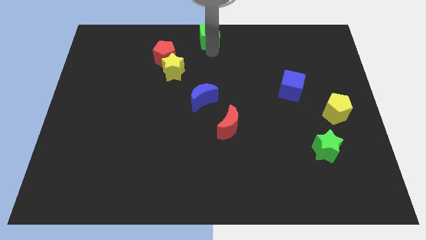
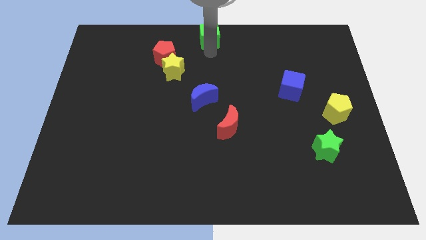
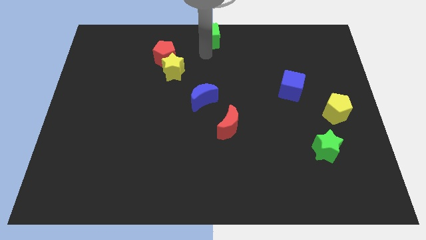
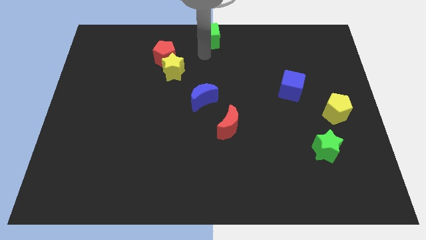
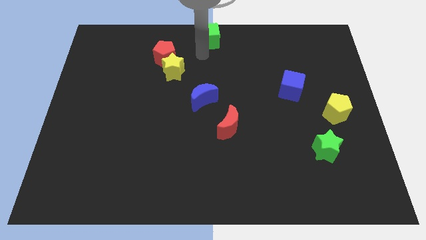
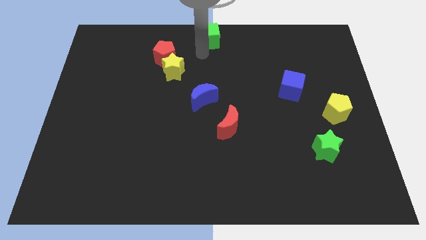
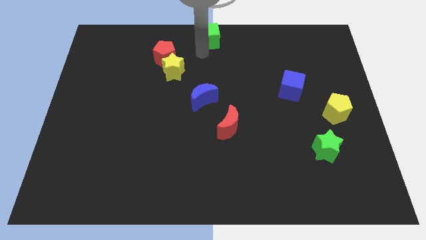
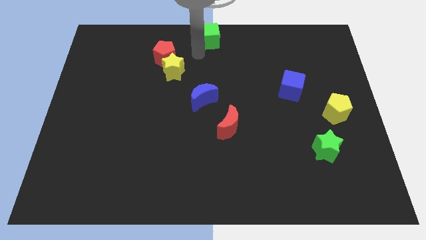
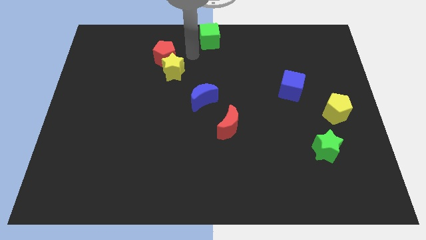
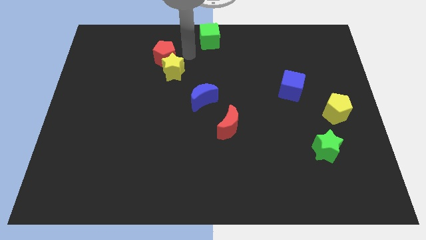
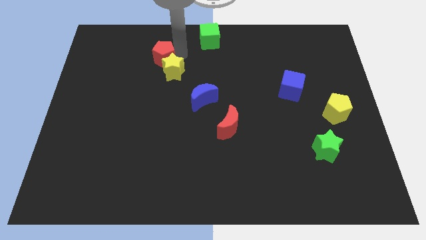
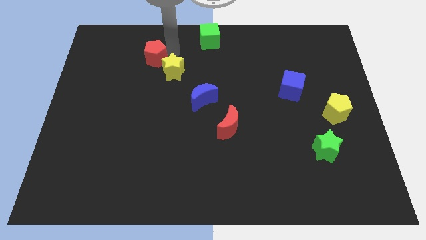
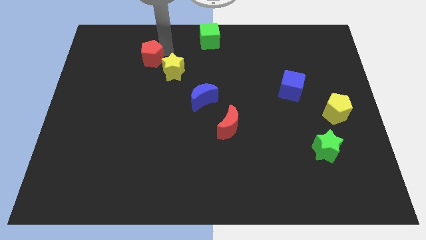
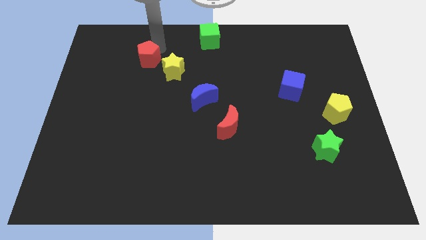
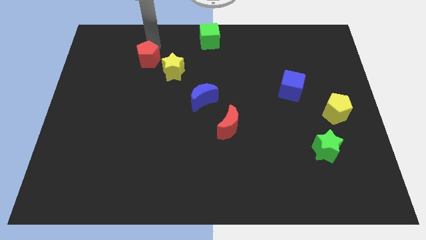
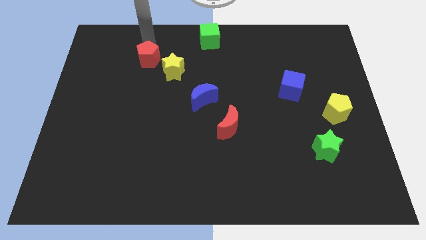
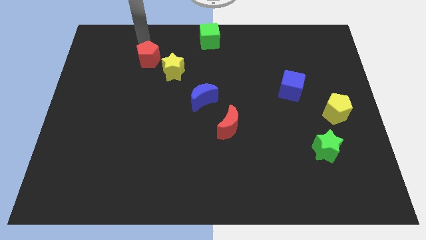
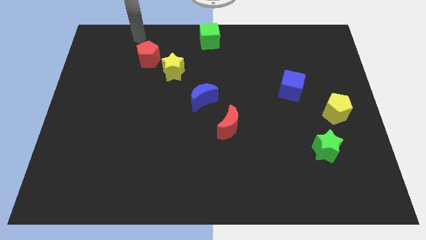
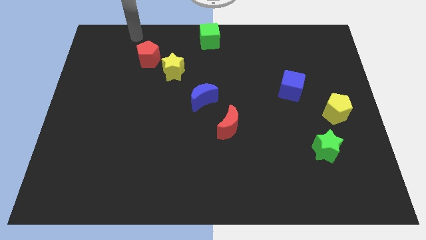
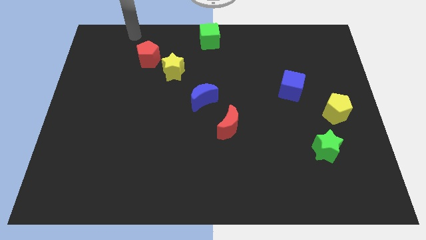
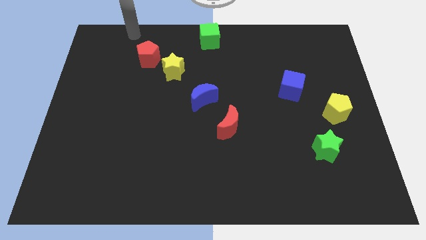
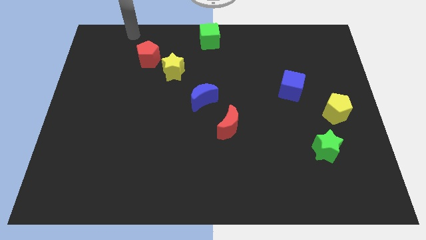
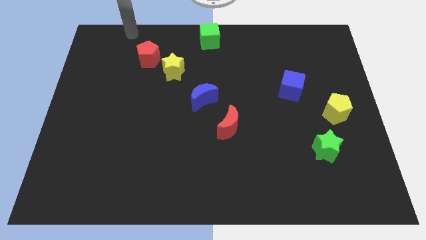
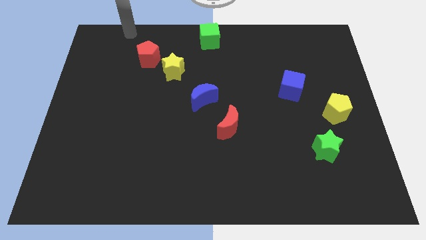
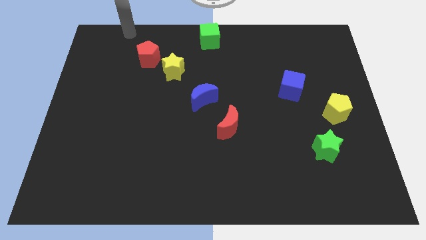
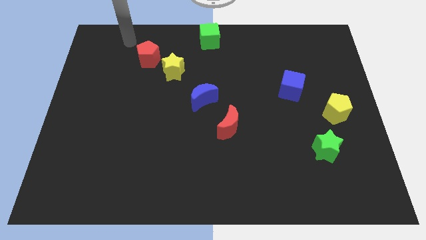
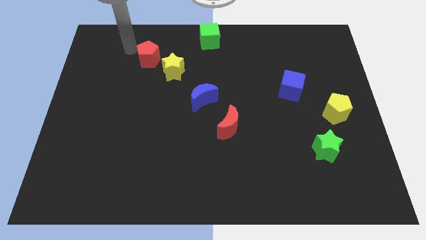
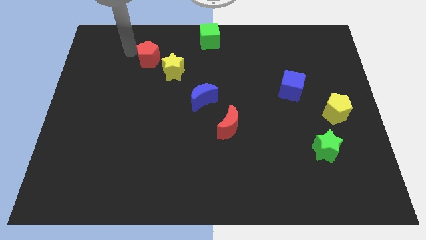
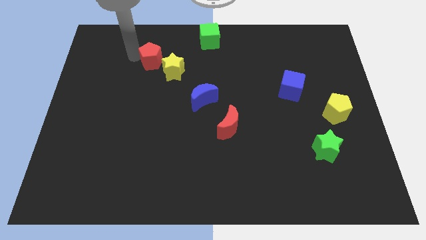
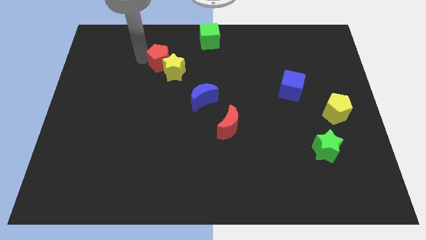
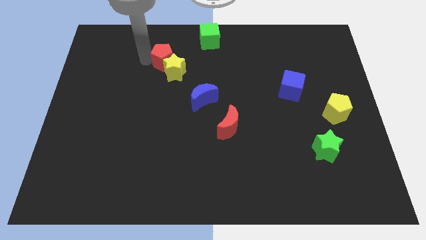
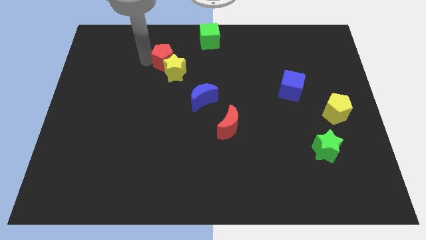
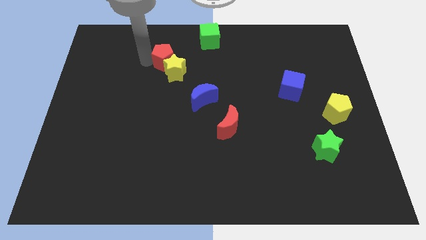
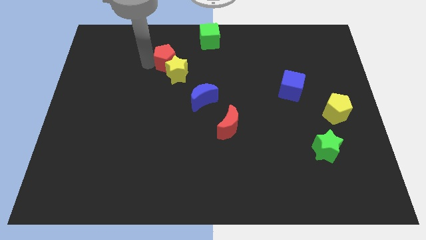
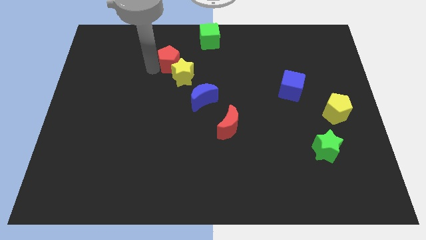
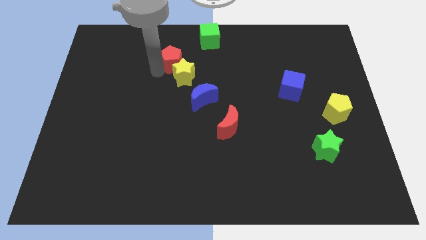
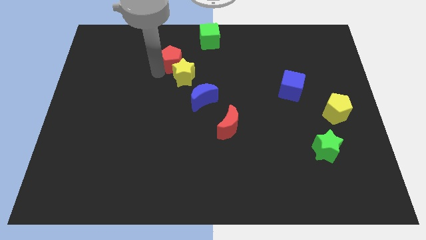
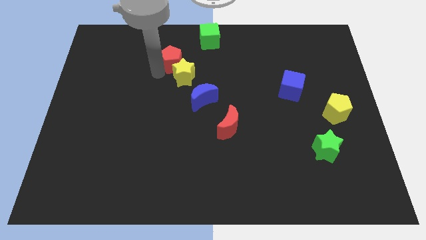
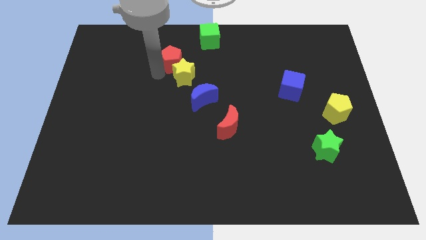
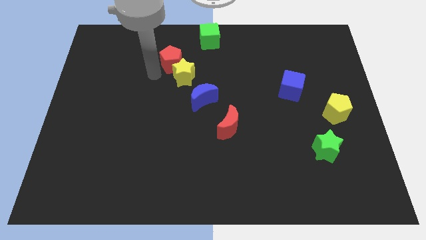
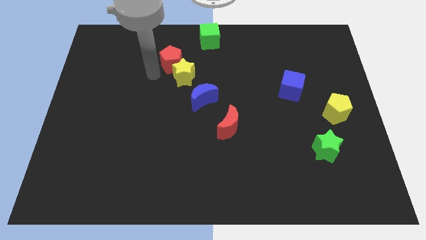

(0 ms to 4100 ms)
move the red pentagon into the yellow star

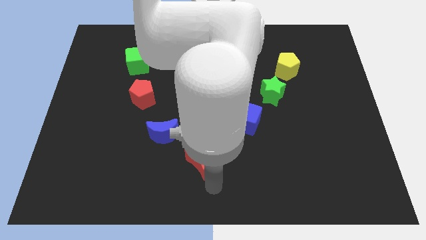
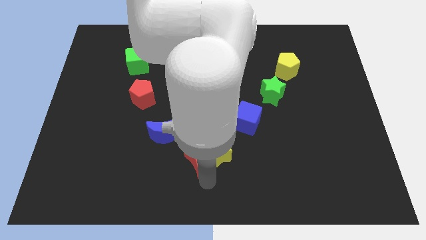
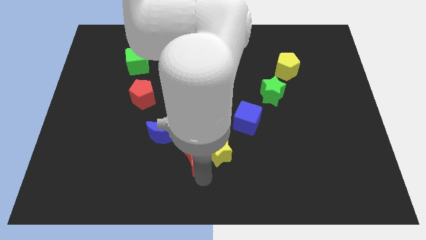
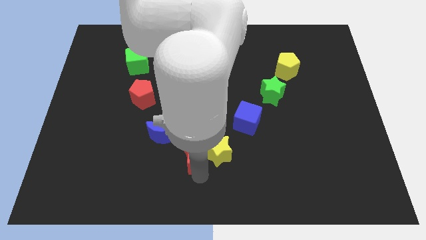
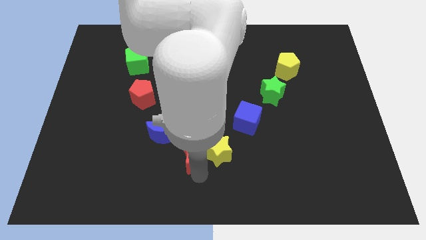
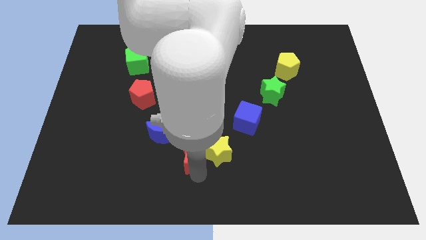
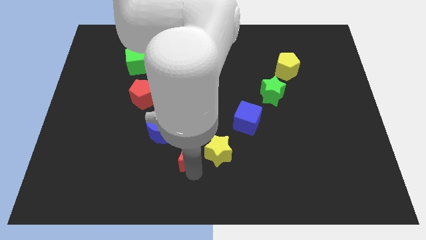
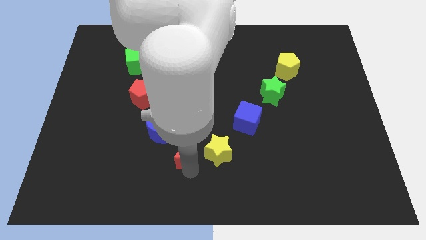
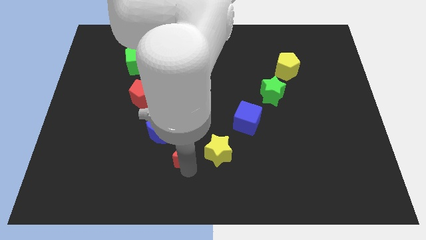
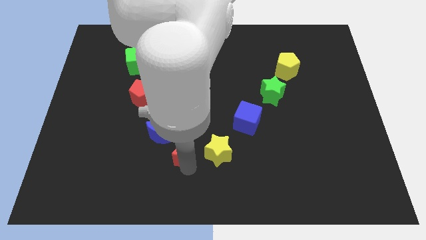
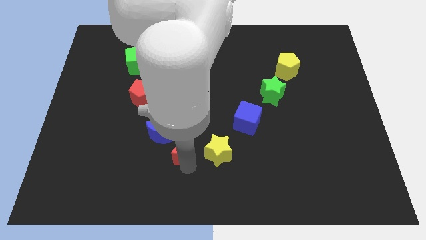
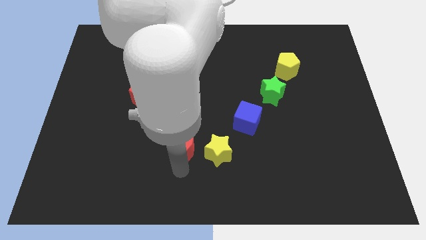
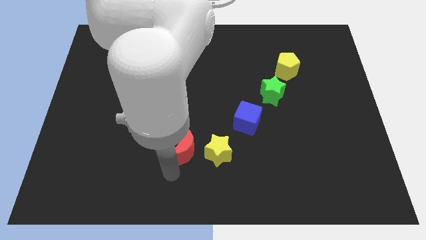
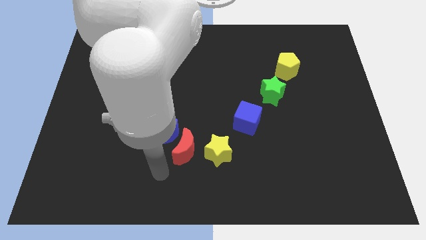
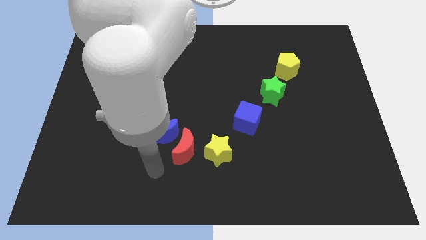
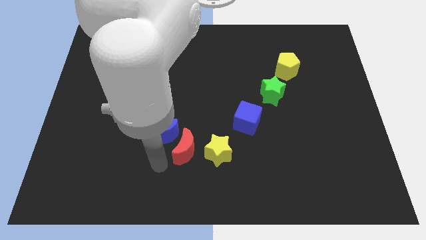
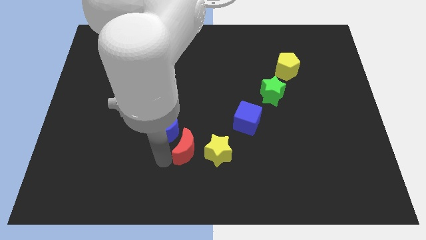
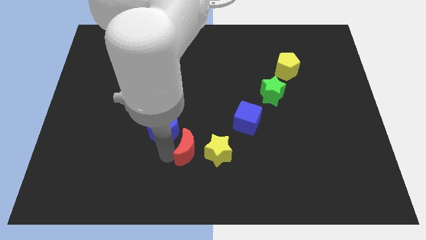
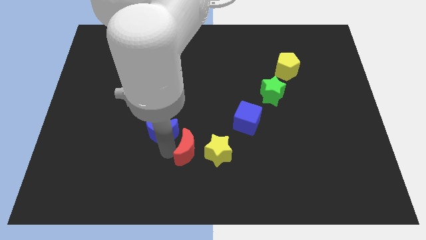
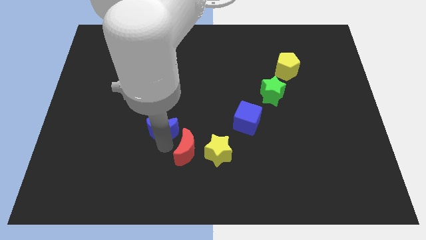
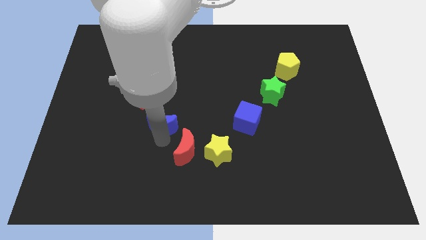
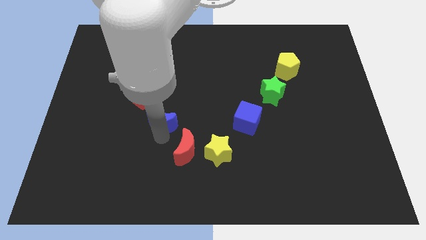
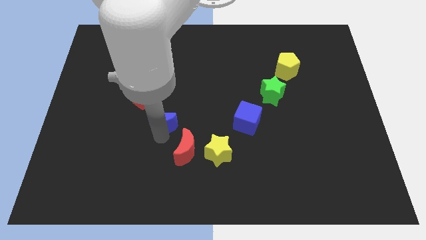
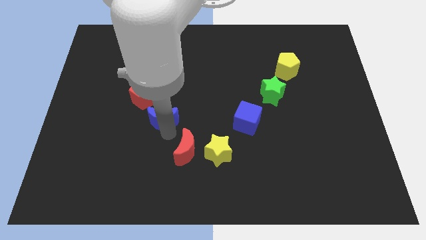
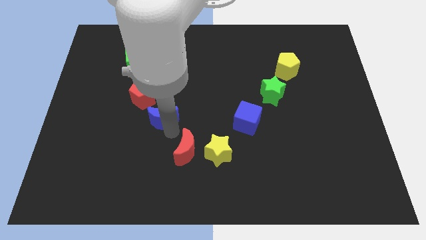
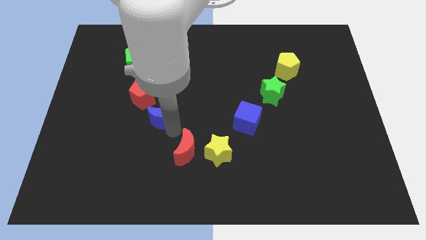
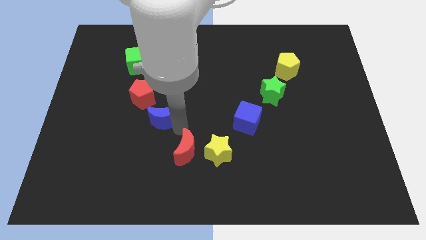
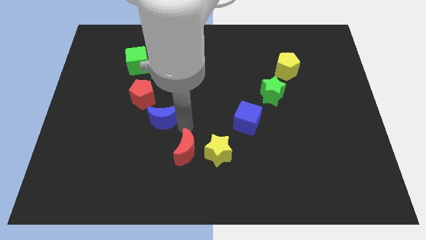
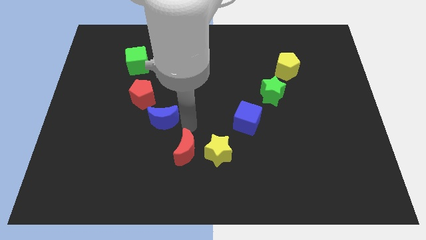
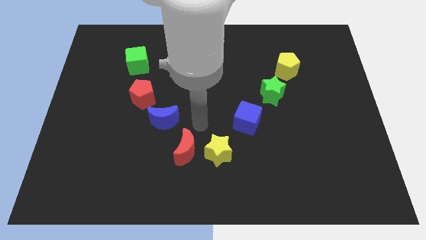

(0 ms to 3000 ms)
make a space between red moon blue crescent

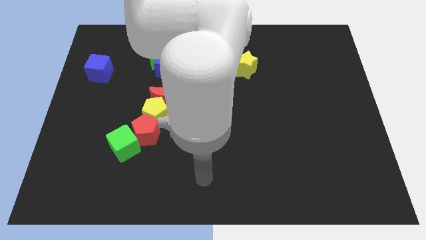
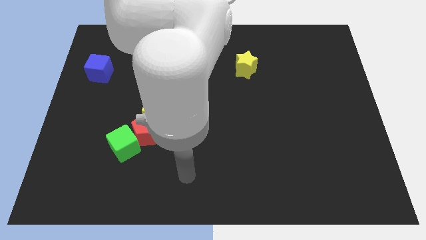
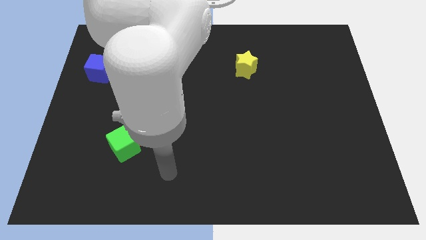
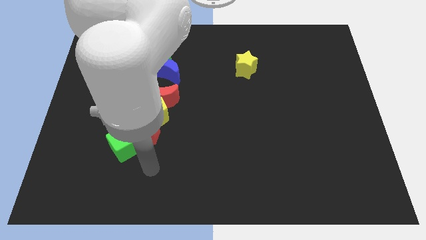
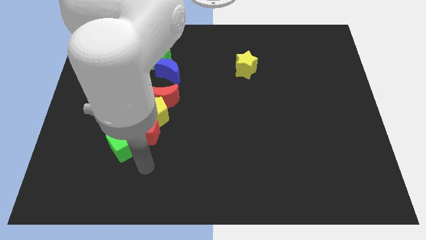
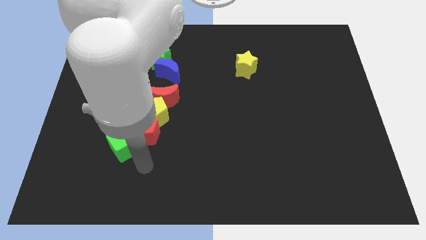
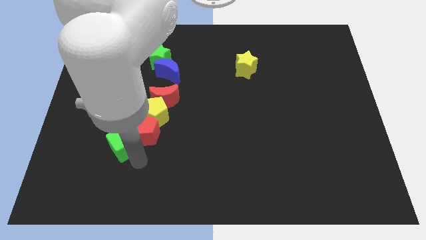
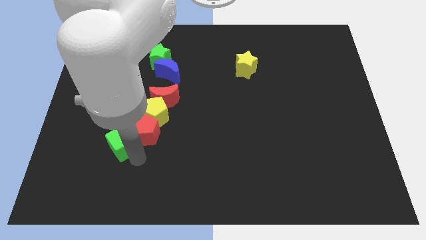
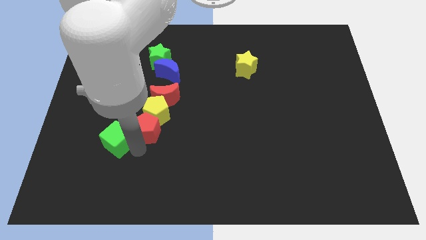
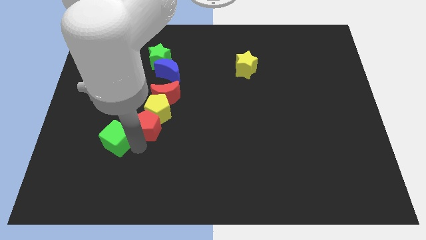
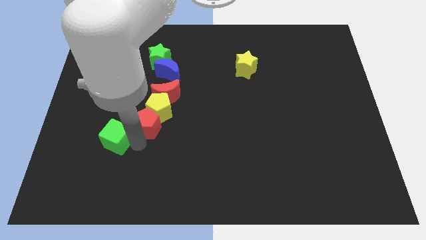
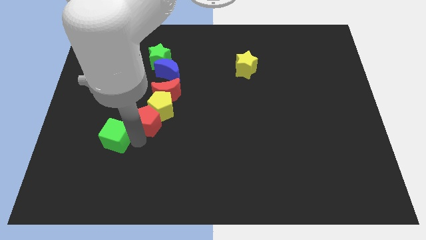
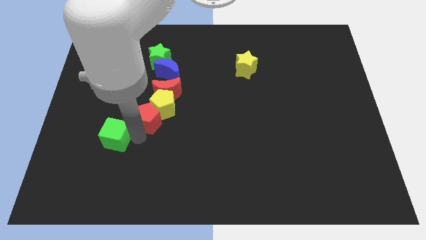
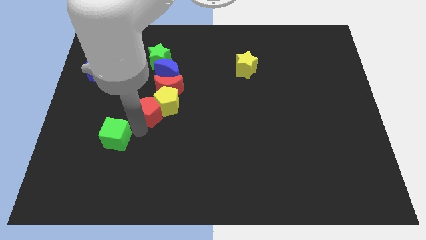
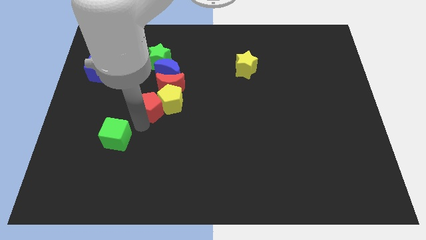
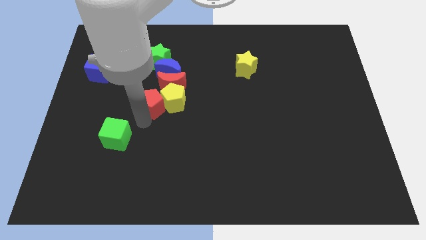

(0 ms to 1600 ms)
separate the green cube with the group of blocks

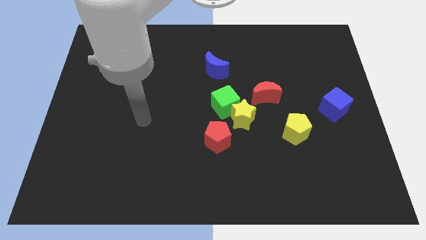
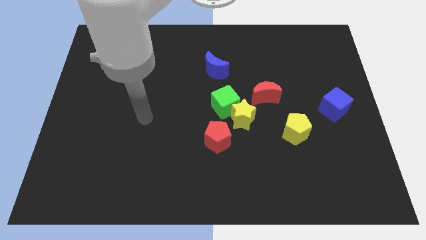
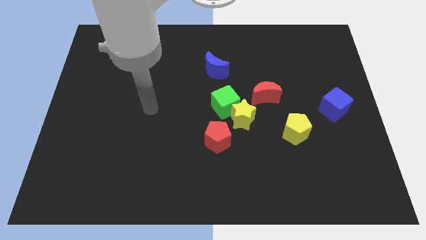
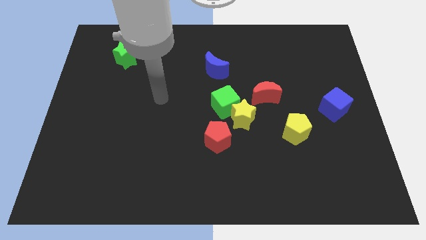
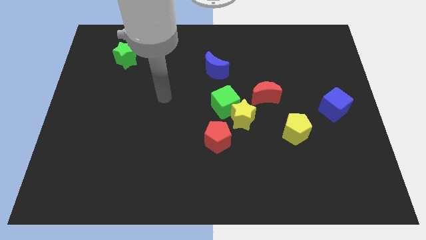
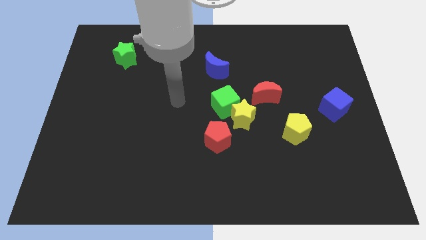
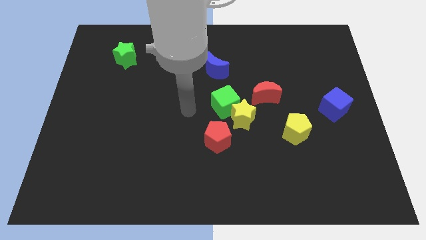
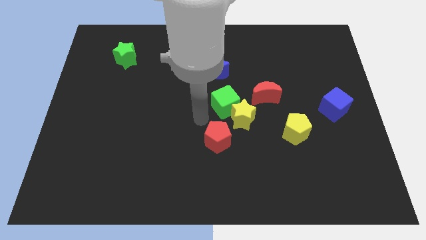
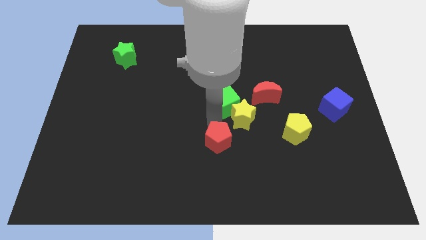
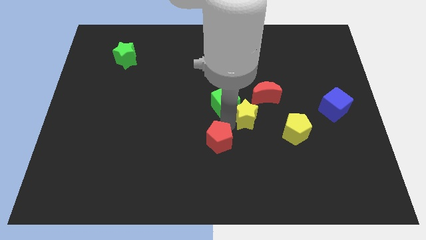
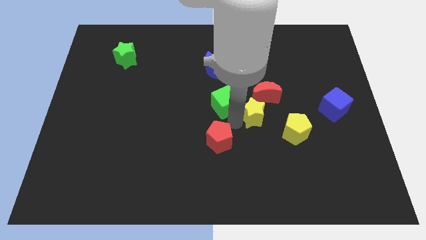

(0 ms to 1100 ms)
move your arm close to the yellow star
